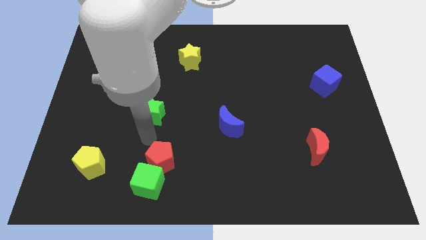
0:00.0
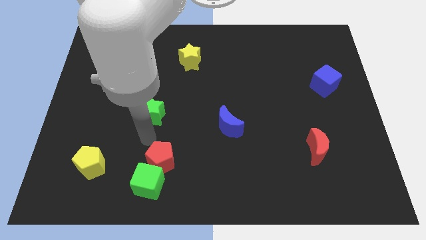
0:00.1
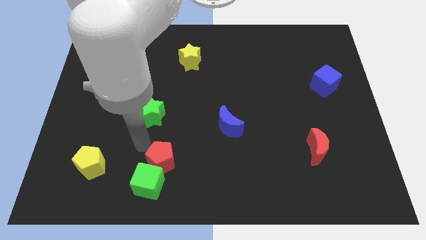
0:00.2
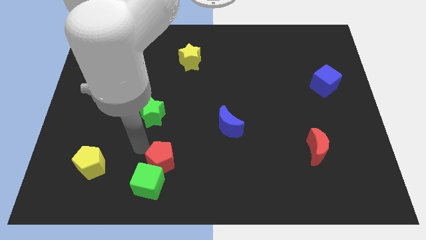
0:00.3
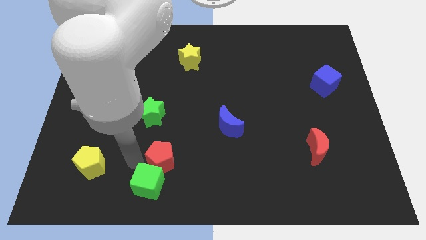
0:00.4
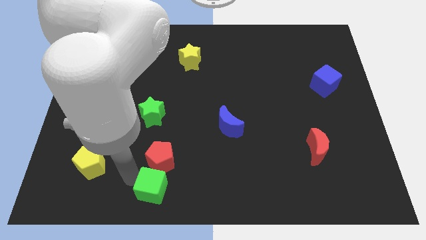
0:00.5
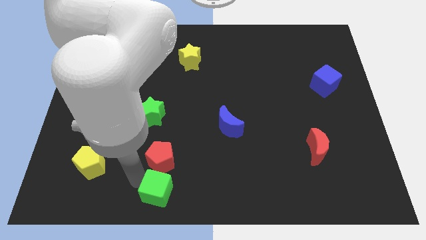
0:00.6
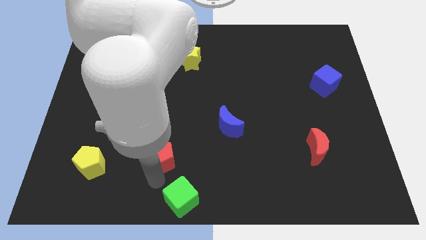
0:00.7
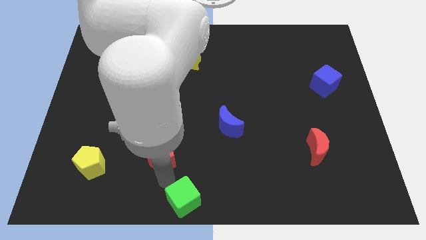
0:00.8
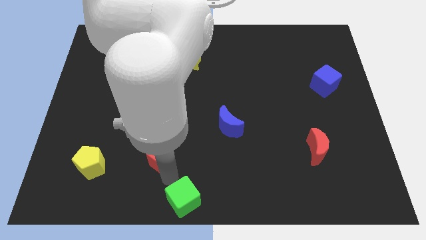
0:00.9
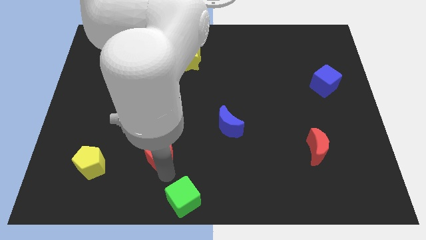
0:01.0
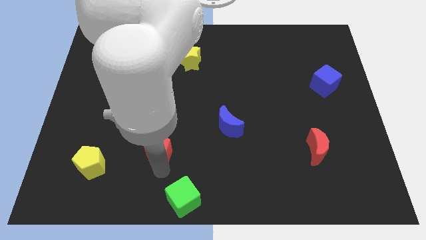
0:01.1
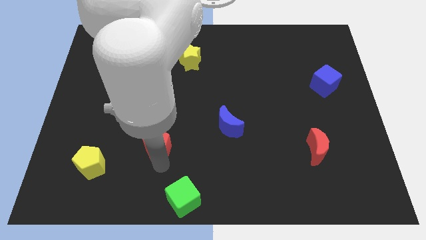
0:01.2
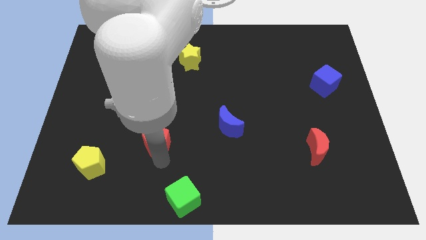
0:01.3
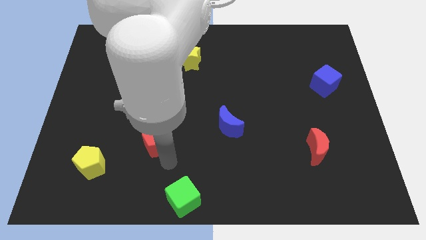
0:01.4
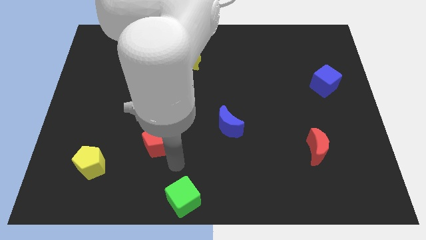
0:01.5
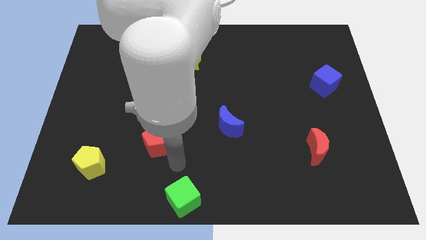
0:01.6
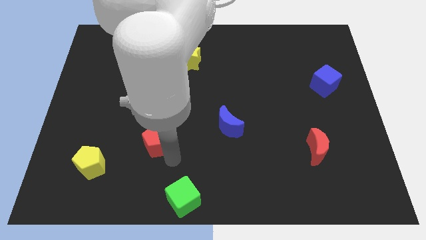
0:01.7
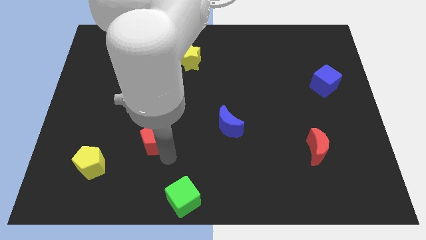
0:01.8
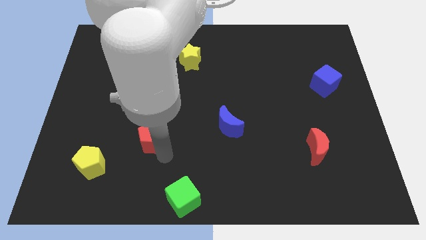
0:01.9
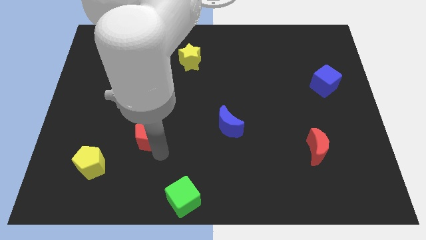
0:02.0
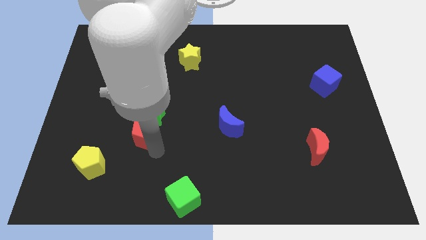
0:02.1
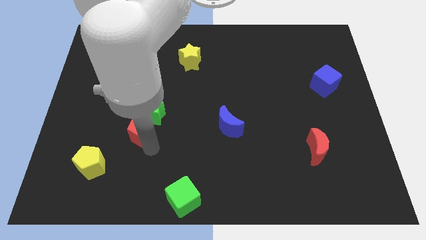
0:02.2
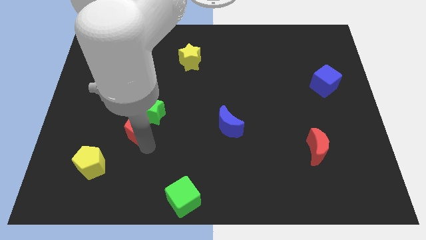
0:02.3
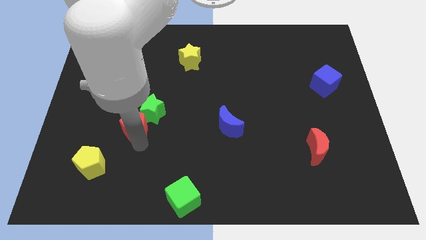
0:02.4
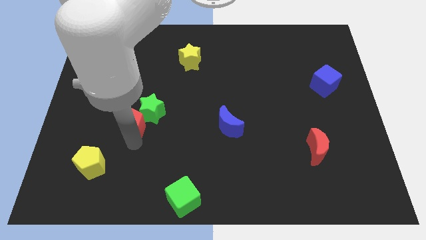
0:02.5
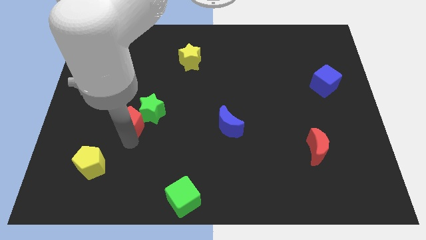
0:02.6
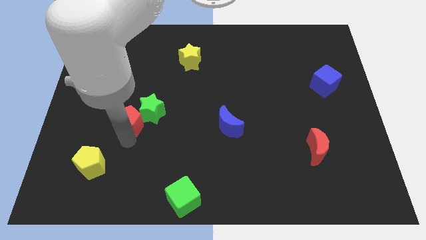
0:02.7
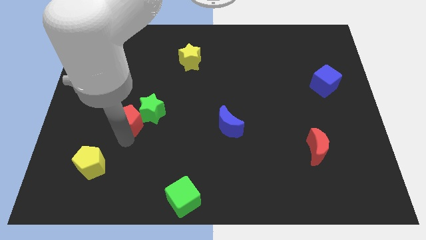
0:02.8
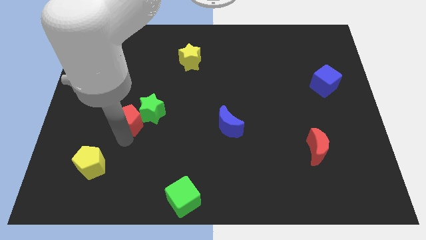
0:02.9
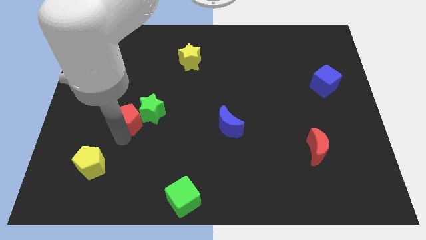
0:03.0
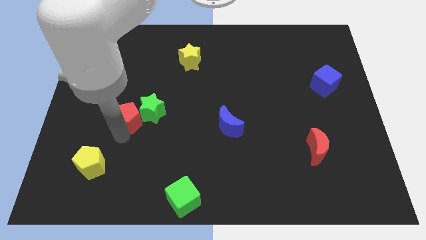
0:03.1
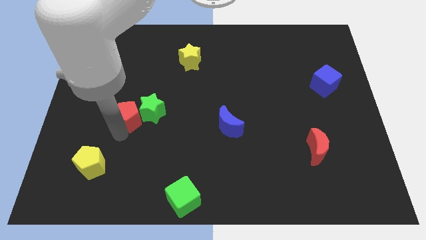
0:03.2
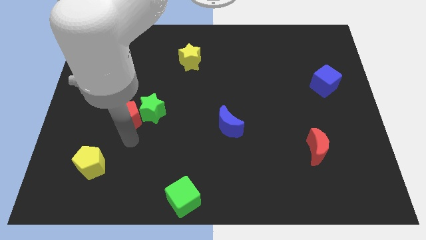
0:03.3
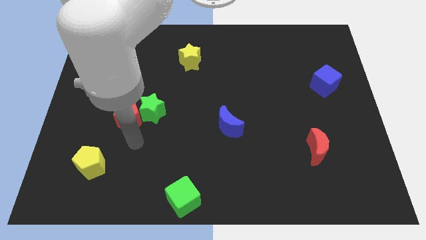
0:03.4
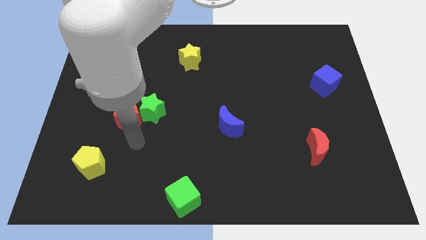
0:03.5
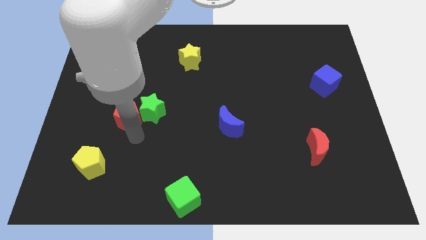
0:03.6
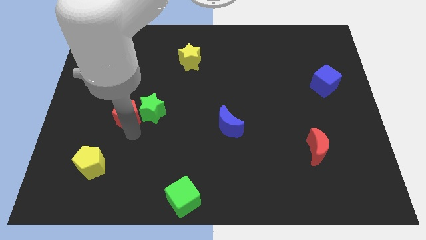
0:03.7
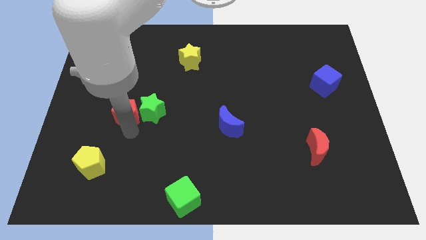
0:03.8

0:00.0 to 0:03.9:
place red pentagon to the left of green star

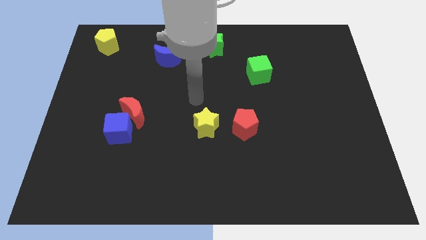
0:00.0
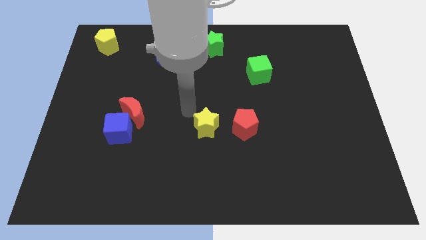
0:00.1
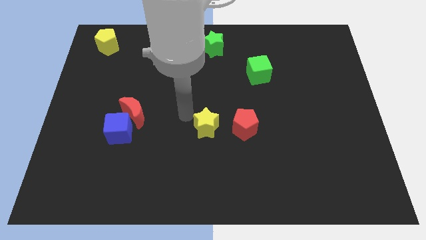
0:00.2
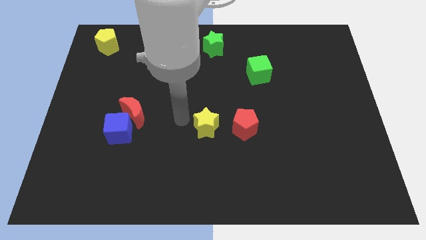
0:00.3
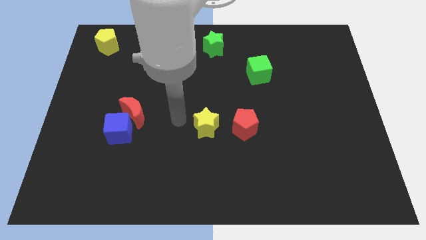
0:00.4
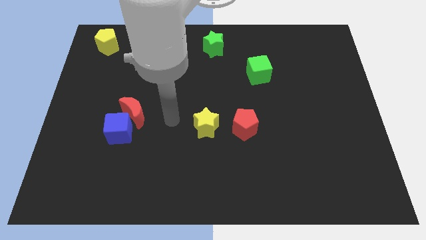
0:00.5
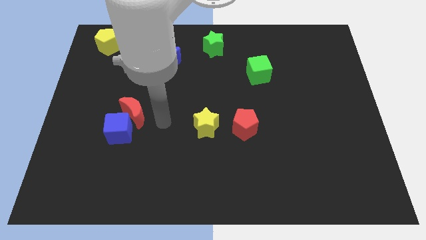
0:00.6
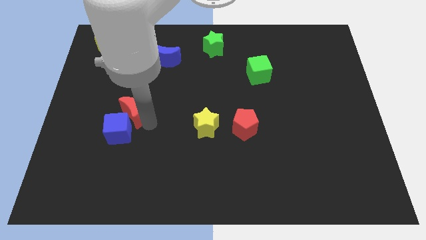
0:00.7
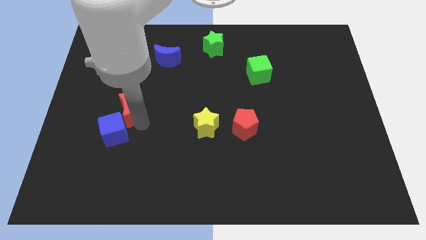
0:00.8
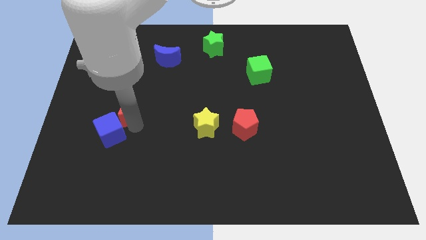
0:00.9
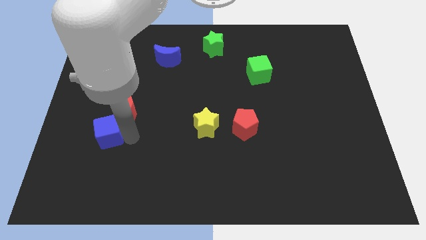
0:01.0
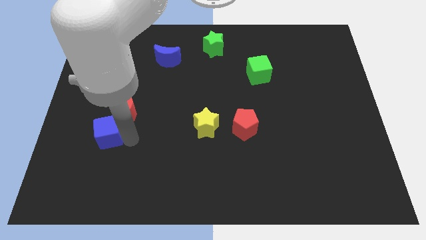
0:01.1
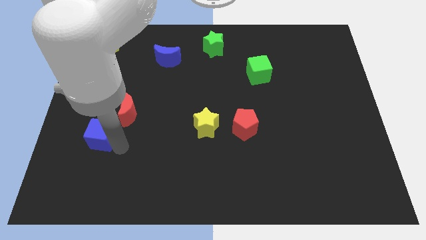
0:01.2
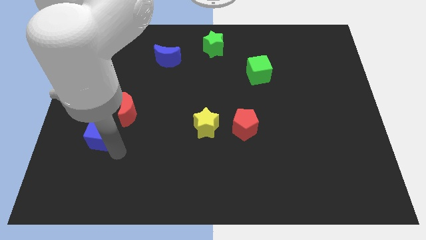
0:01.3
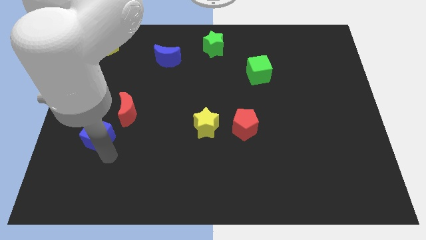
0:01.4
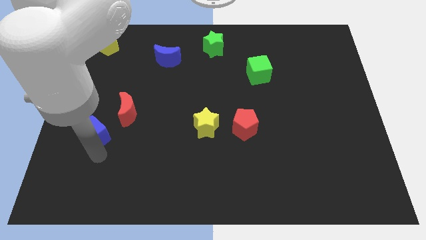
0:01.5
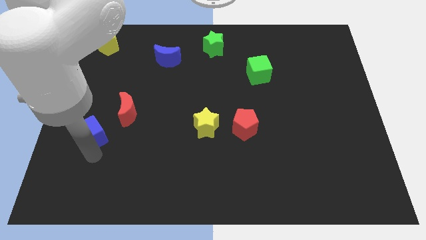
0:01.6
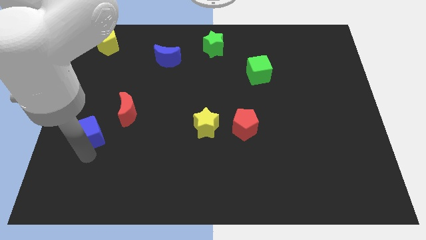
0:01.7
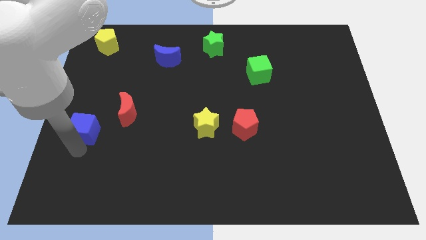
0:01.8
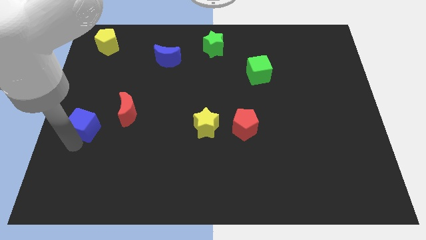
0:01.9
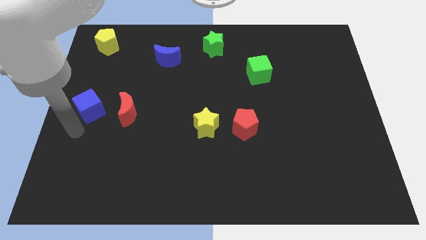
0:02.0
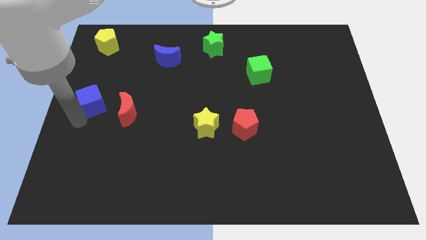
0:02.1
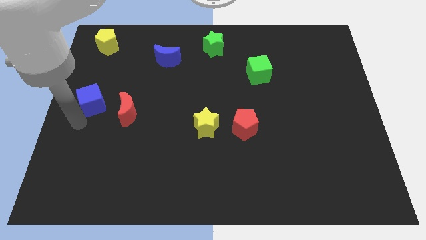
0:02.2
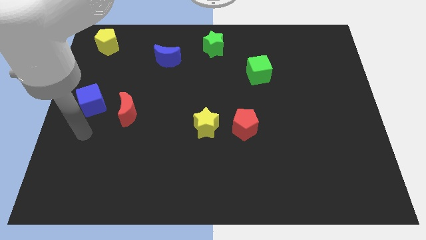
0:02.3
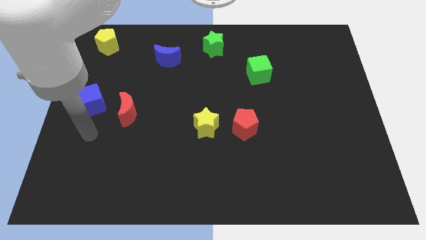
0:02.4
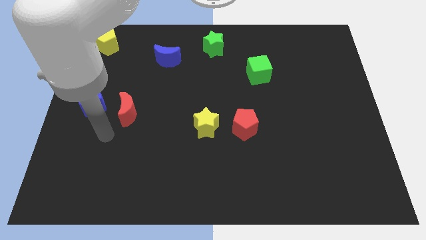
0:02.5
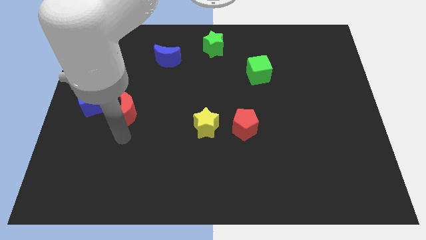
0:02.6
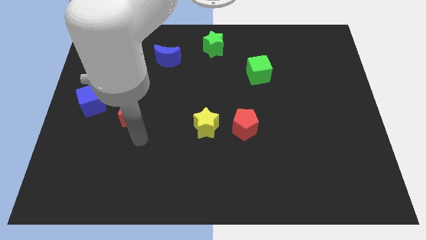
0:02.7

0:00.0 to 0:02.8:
move the blue cube to the left of the red crescent

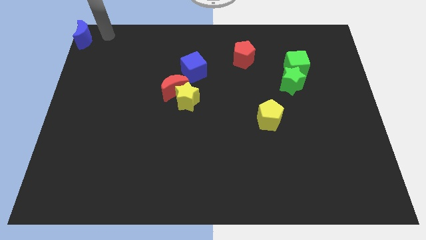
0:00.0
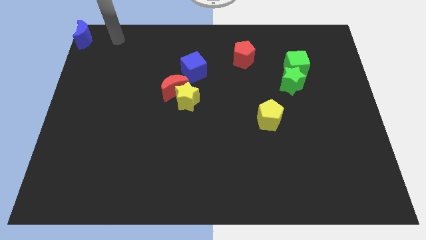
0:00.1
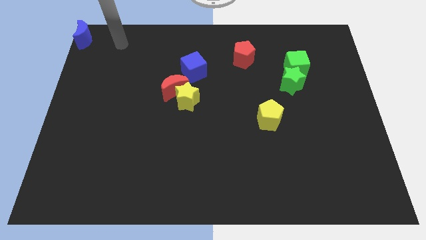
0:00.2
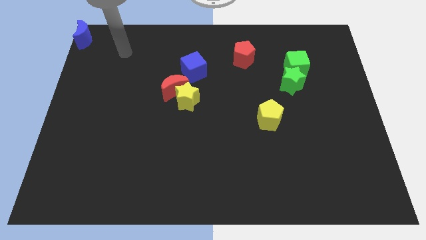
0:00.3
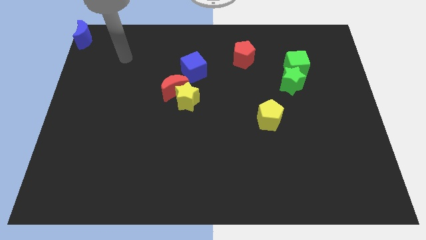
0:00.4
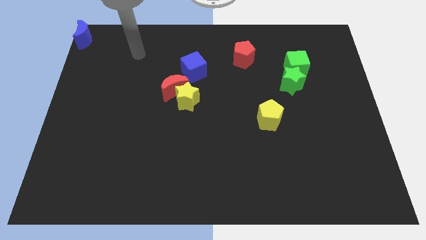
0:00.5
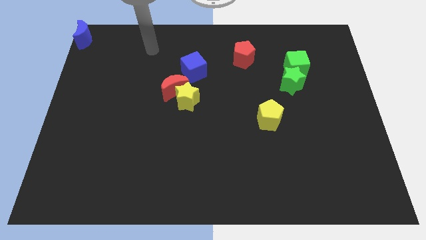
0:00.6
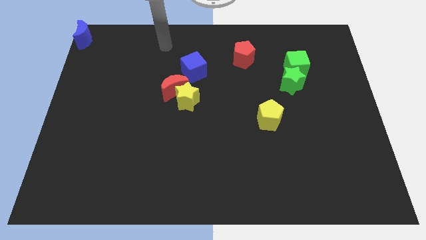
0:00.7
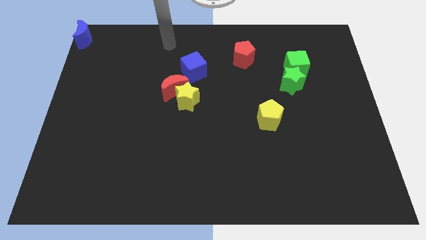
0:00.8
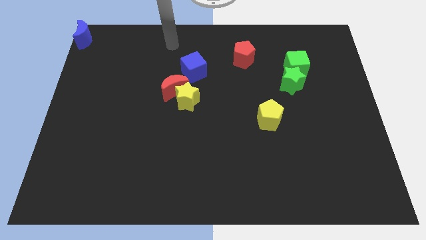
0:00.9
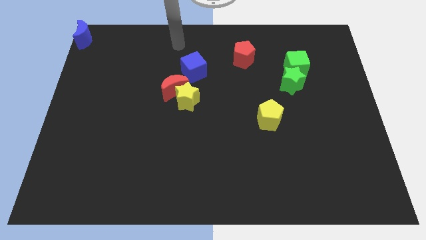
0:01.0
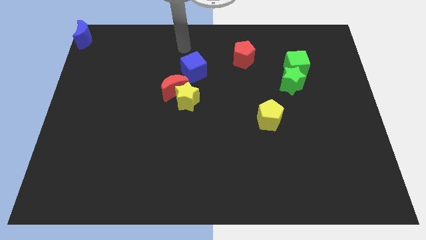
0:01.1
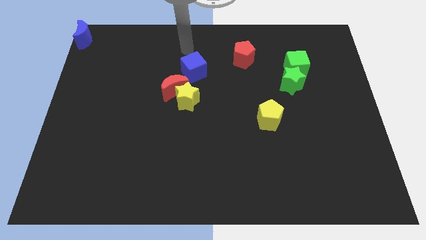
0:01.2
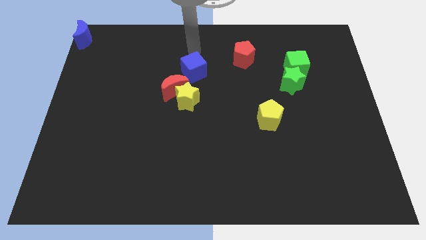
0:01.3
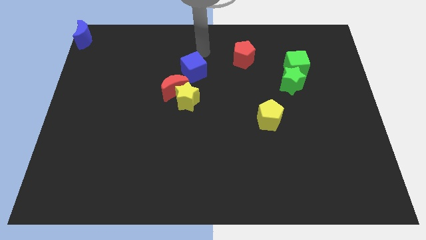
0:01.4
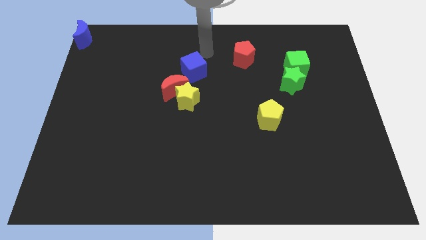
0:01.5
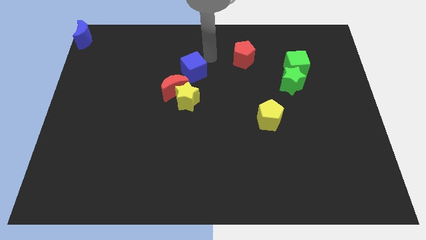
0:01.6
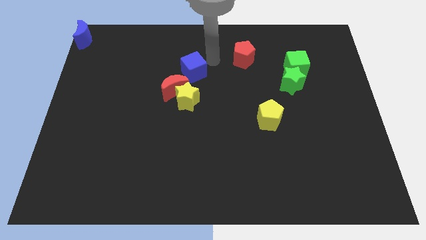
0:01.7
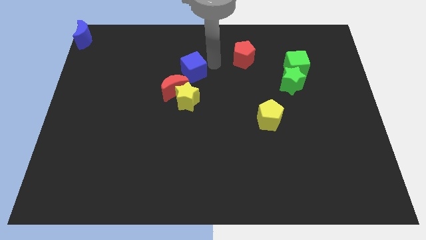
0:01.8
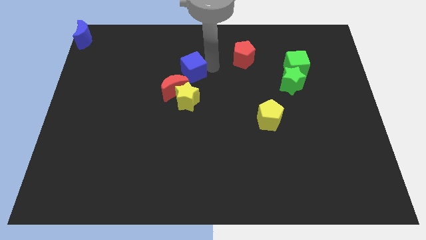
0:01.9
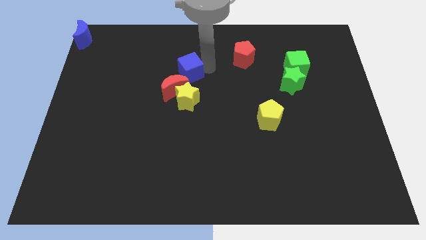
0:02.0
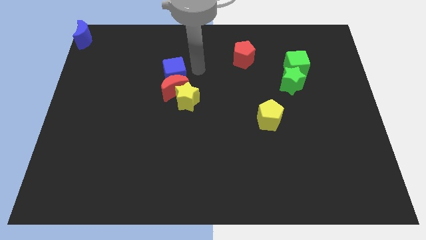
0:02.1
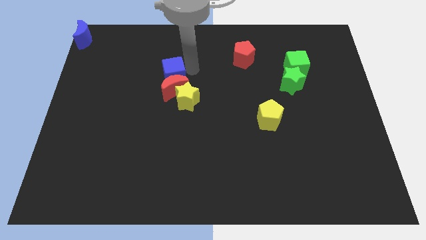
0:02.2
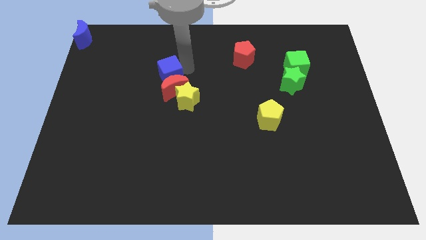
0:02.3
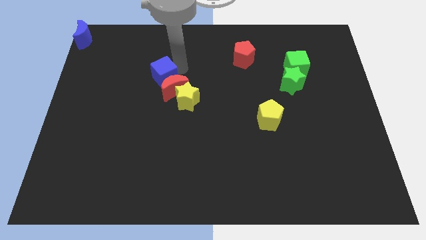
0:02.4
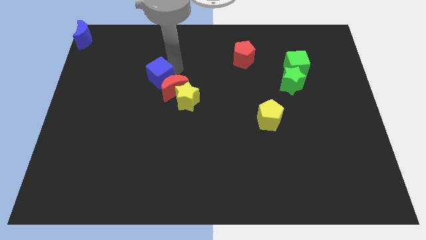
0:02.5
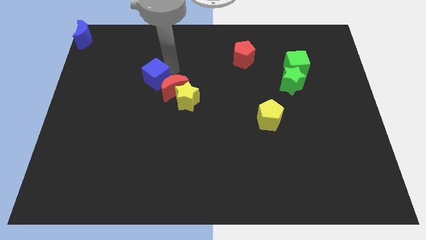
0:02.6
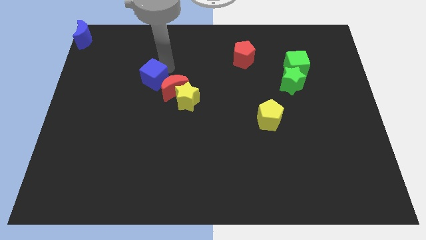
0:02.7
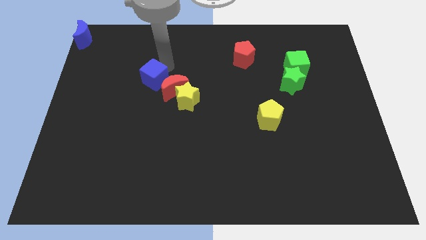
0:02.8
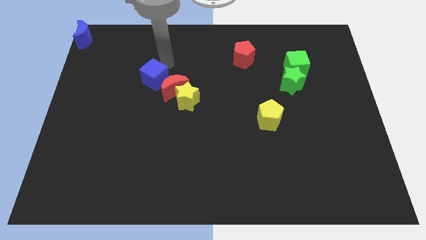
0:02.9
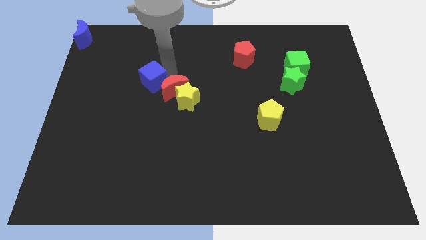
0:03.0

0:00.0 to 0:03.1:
place the blue cube diagonal to the blue crescent
